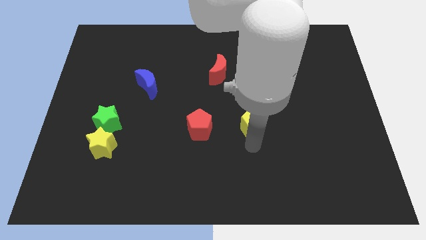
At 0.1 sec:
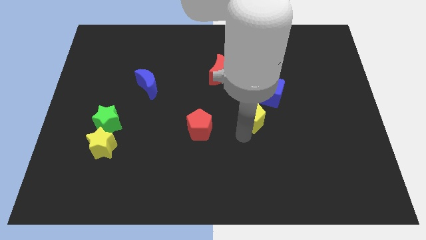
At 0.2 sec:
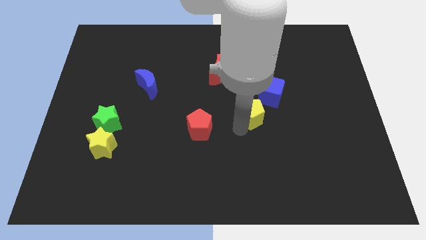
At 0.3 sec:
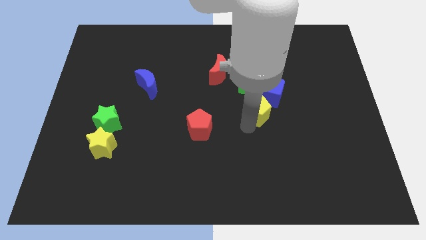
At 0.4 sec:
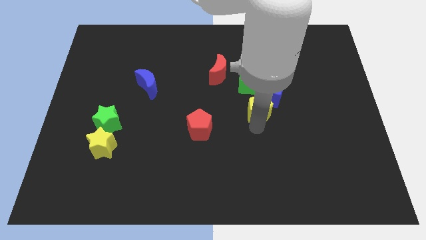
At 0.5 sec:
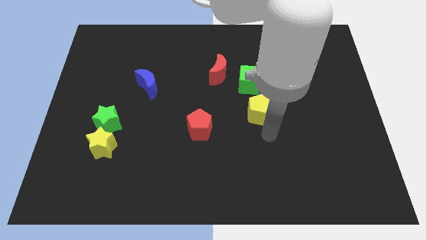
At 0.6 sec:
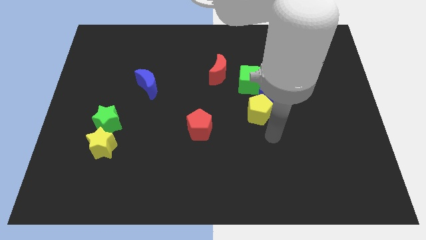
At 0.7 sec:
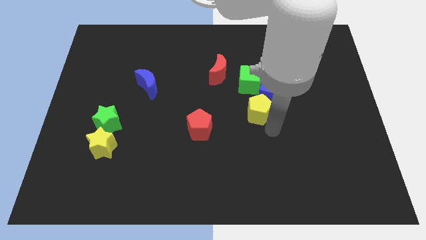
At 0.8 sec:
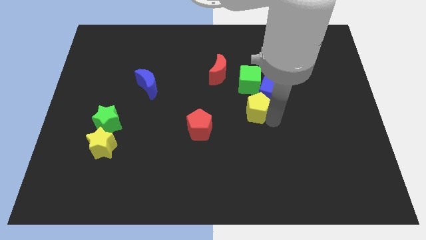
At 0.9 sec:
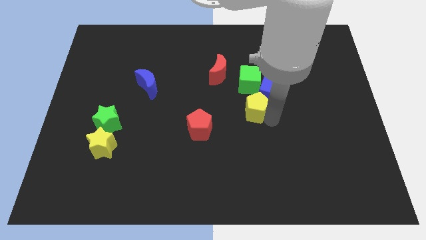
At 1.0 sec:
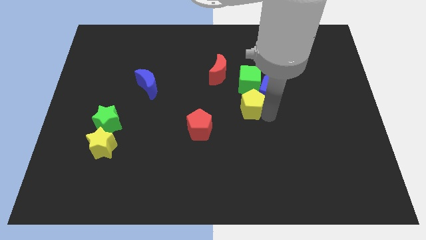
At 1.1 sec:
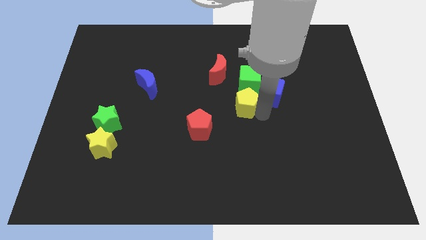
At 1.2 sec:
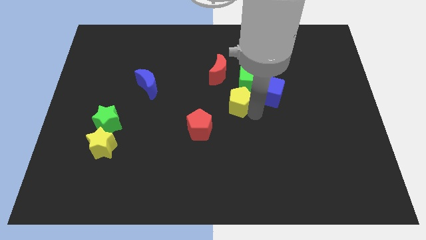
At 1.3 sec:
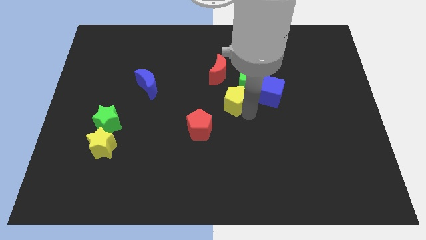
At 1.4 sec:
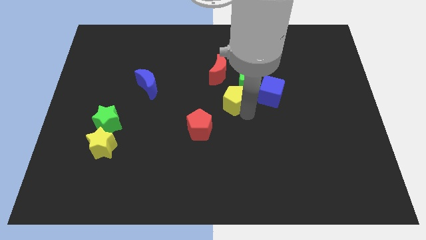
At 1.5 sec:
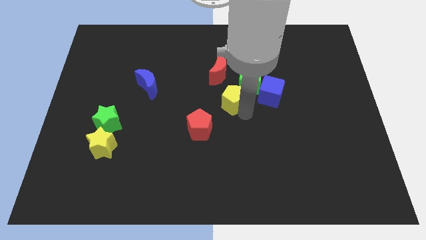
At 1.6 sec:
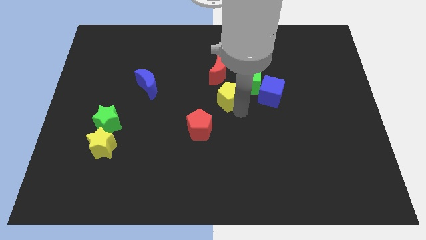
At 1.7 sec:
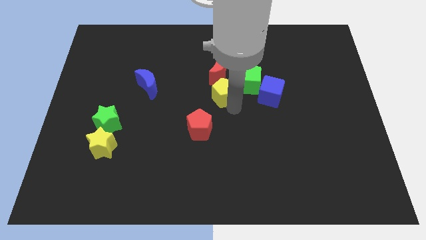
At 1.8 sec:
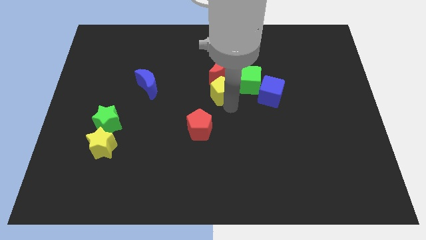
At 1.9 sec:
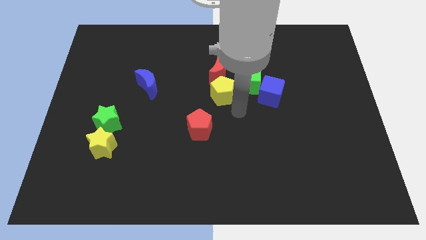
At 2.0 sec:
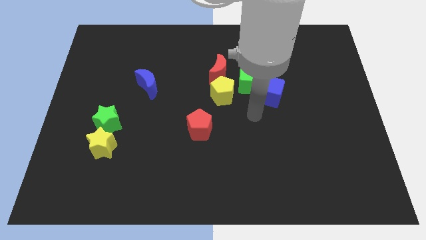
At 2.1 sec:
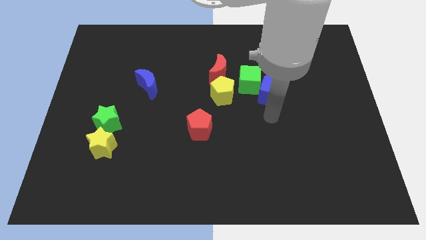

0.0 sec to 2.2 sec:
push the yellow pentagon to the bottom right side of the red moon

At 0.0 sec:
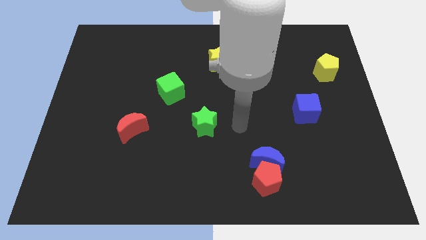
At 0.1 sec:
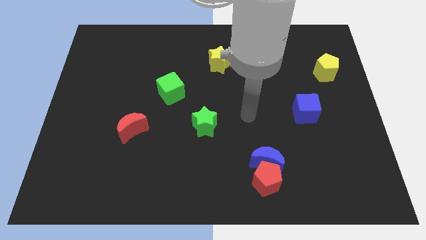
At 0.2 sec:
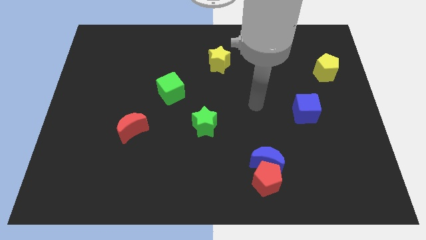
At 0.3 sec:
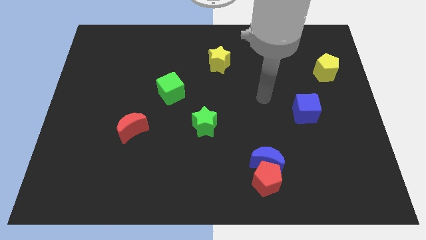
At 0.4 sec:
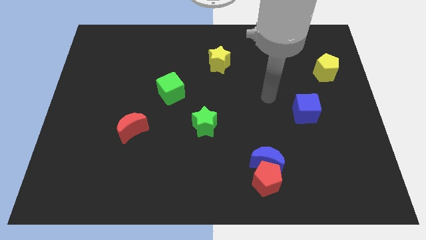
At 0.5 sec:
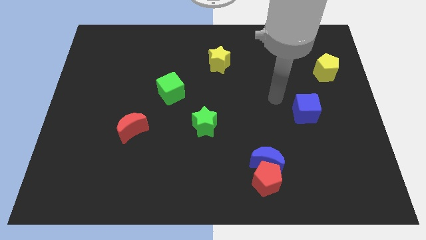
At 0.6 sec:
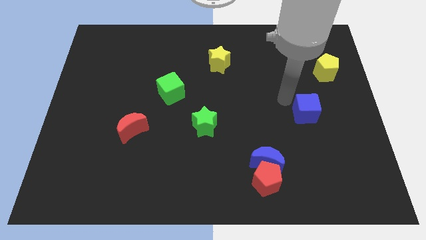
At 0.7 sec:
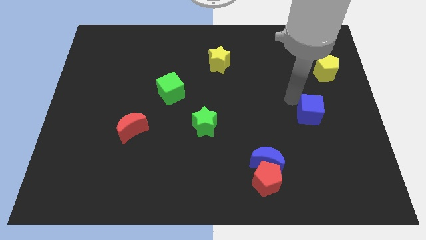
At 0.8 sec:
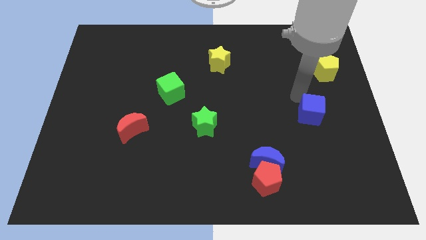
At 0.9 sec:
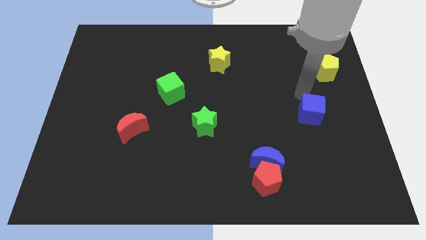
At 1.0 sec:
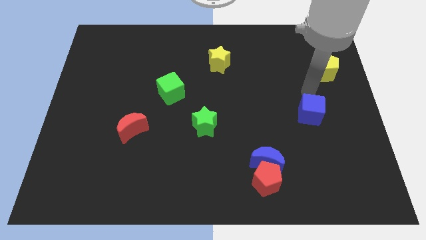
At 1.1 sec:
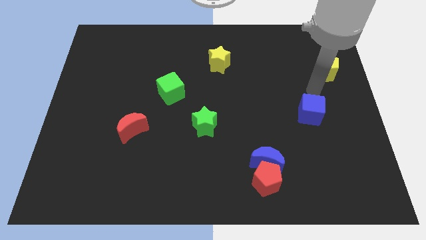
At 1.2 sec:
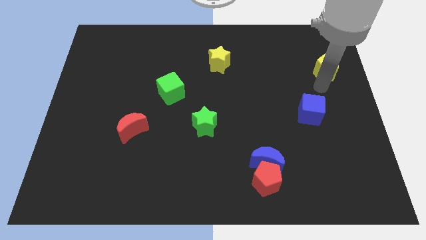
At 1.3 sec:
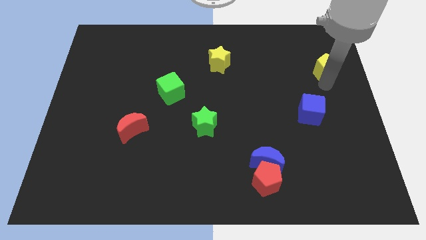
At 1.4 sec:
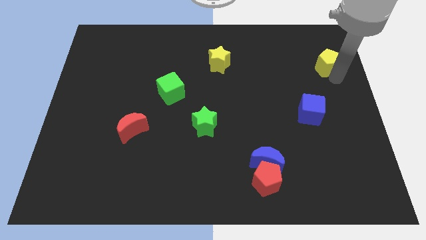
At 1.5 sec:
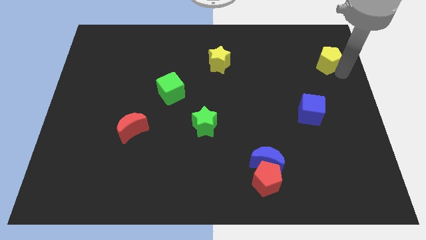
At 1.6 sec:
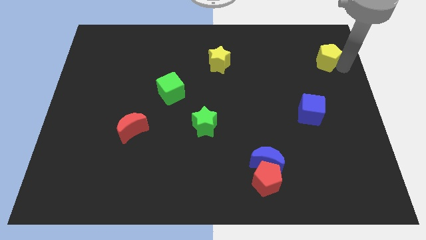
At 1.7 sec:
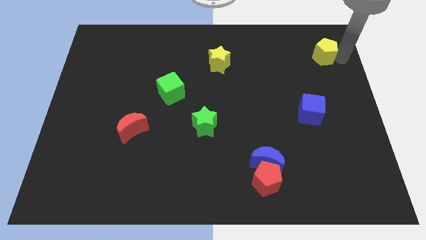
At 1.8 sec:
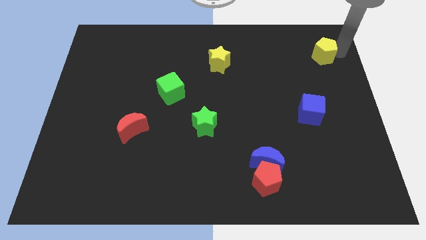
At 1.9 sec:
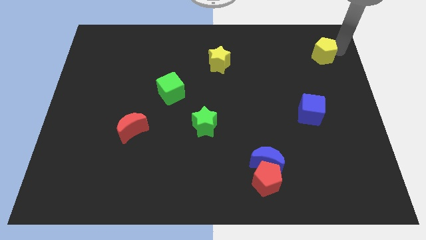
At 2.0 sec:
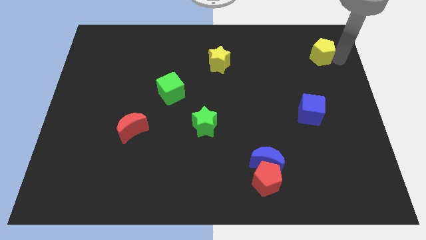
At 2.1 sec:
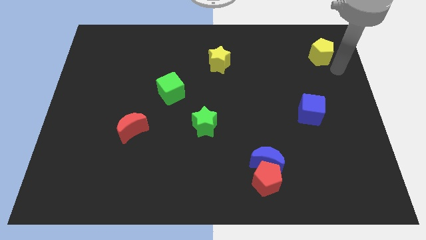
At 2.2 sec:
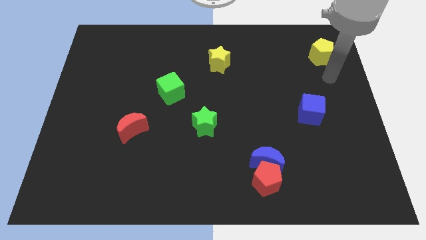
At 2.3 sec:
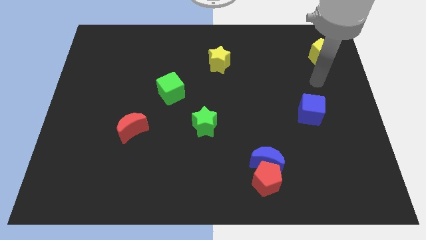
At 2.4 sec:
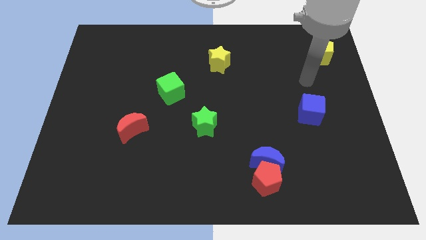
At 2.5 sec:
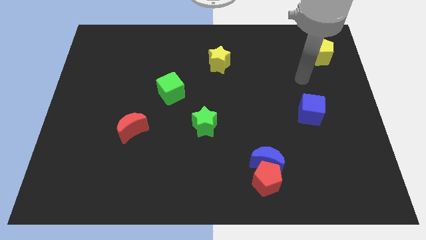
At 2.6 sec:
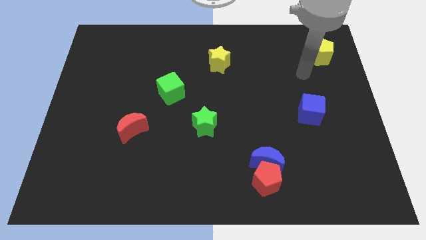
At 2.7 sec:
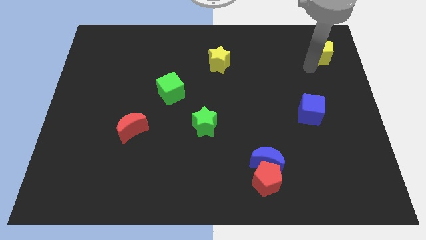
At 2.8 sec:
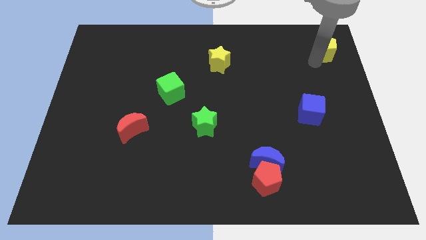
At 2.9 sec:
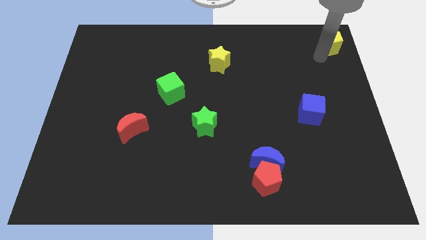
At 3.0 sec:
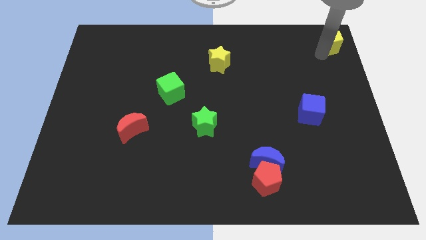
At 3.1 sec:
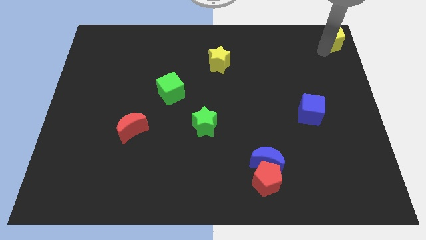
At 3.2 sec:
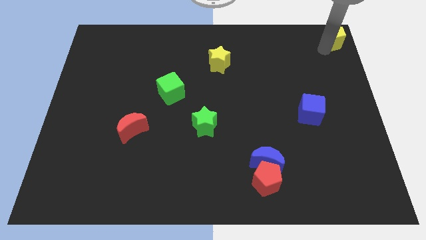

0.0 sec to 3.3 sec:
move the yellow pentagon towards the top right corner of the board

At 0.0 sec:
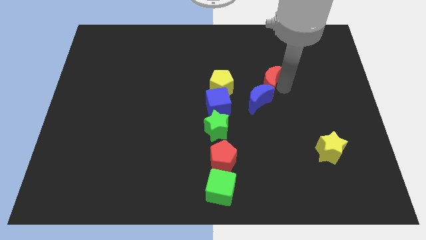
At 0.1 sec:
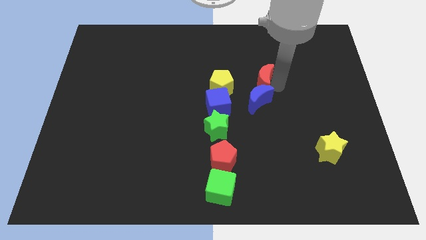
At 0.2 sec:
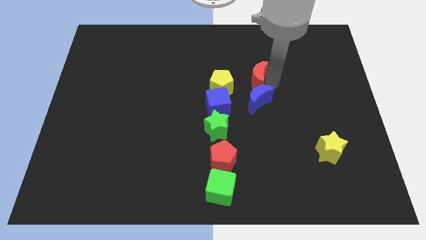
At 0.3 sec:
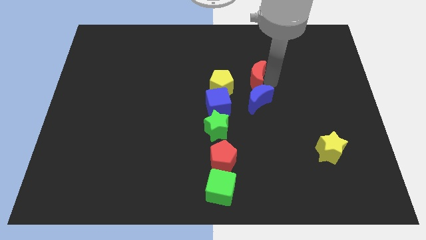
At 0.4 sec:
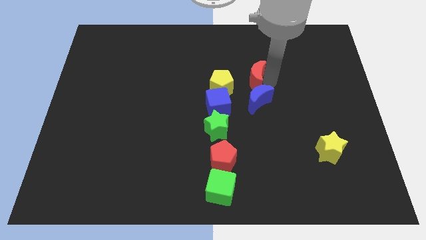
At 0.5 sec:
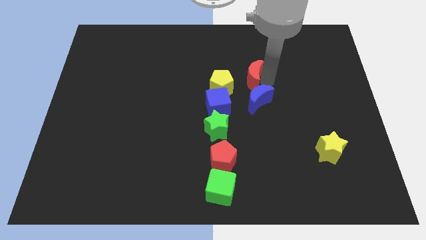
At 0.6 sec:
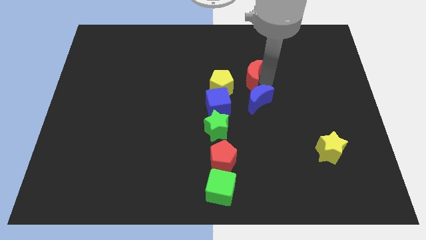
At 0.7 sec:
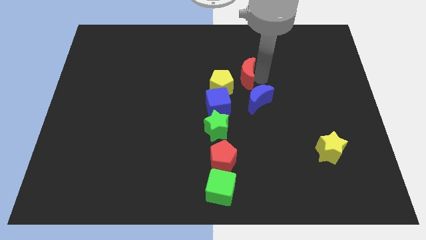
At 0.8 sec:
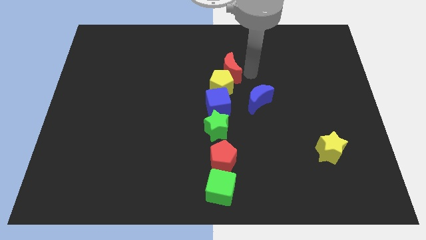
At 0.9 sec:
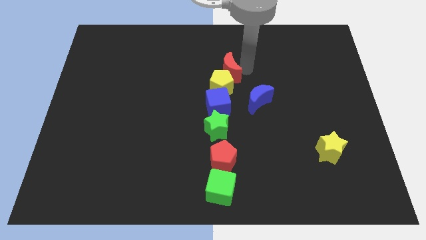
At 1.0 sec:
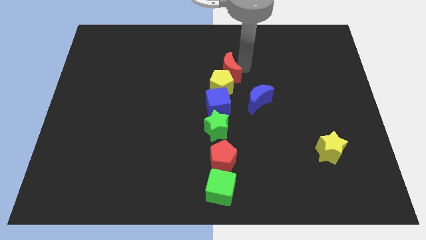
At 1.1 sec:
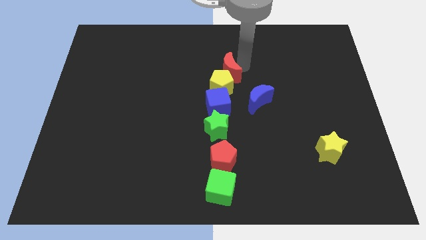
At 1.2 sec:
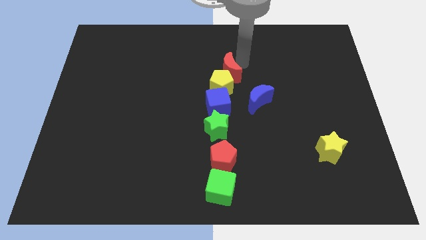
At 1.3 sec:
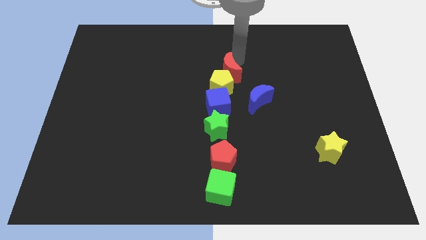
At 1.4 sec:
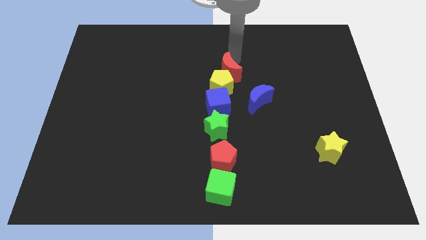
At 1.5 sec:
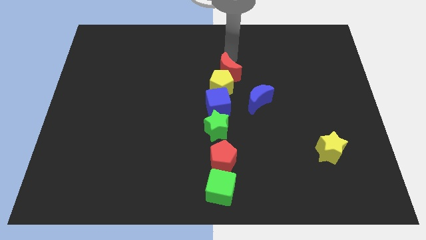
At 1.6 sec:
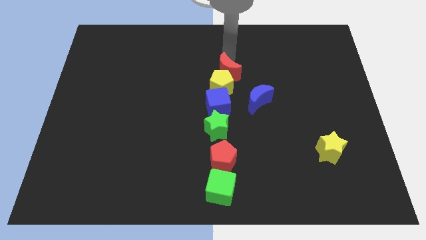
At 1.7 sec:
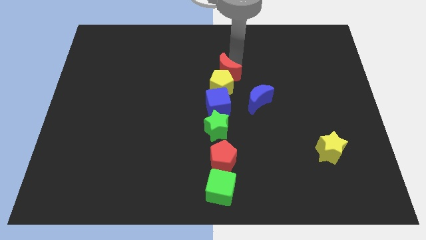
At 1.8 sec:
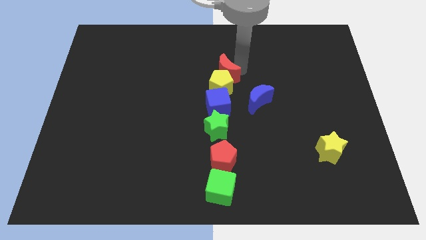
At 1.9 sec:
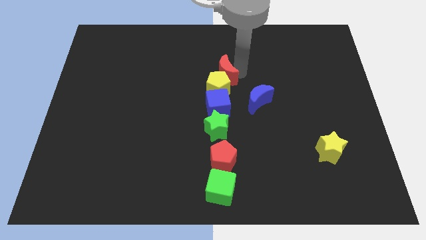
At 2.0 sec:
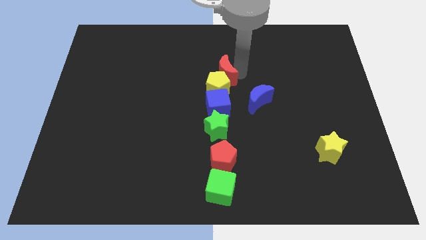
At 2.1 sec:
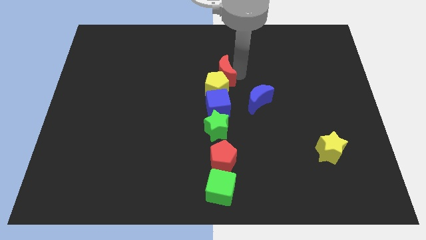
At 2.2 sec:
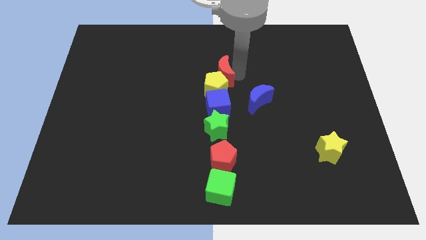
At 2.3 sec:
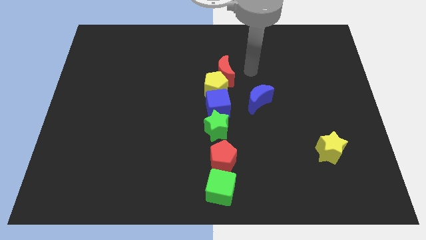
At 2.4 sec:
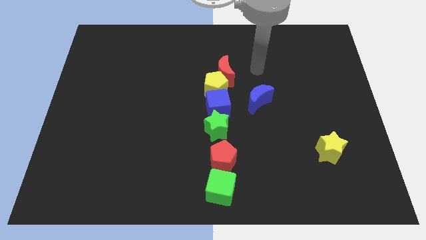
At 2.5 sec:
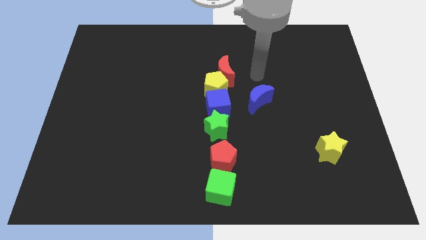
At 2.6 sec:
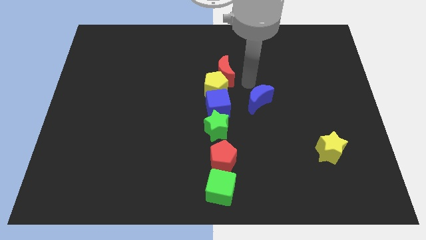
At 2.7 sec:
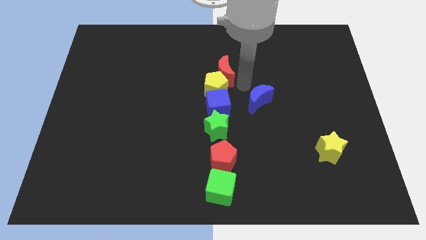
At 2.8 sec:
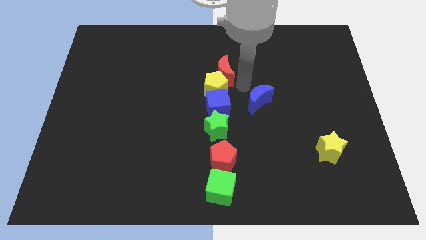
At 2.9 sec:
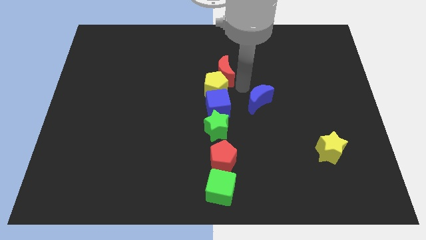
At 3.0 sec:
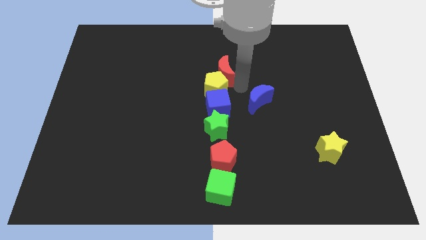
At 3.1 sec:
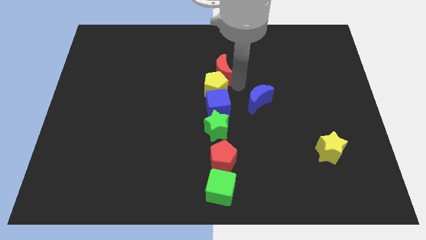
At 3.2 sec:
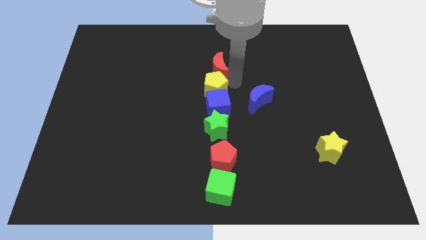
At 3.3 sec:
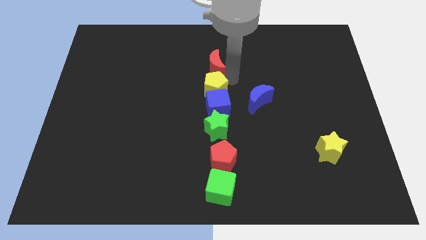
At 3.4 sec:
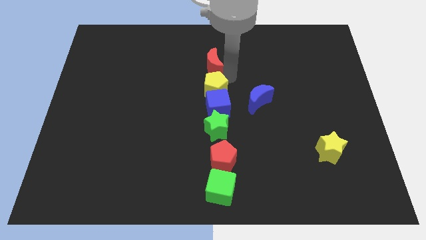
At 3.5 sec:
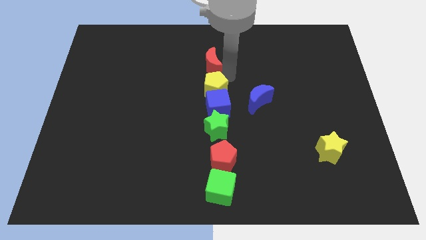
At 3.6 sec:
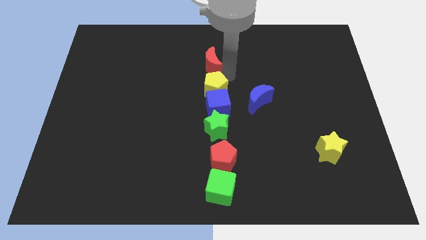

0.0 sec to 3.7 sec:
place the red moon on top of group of blocks to form a vertical line
